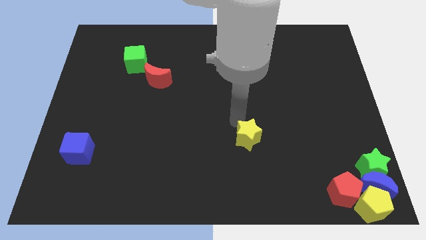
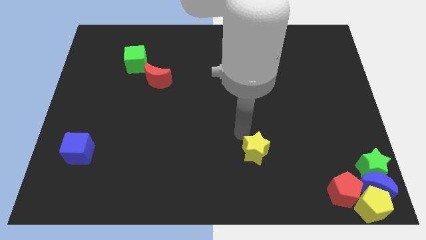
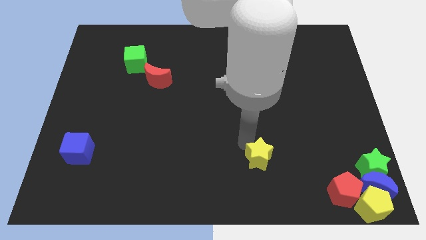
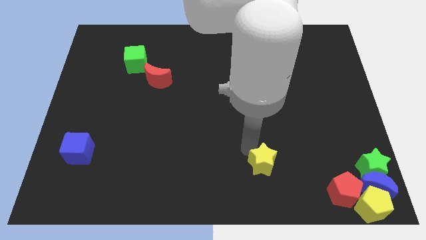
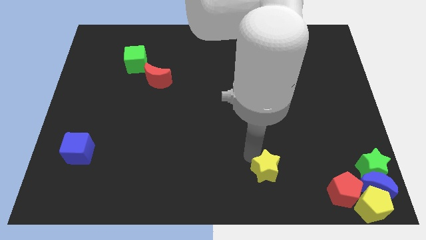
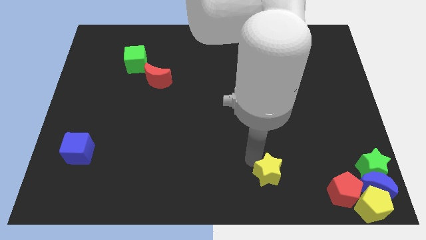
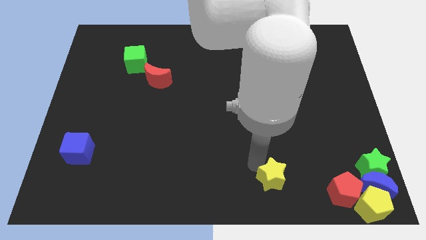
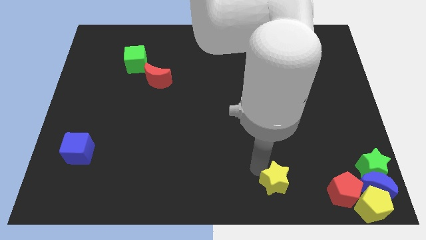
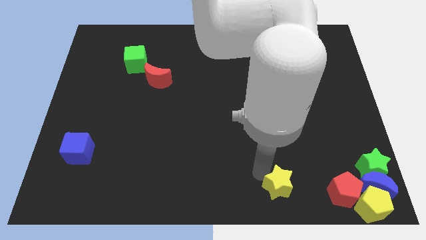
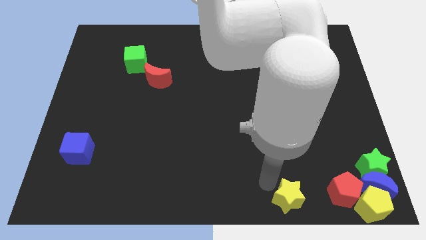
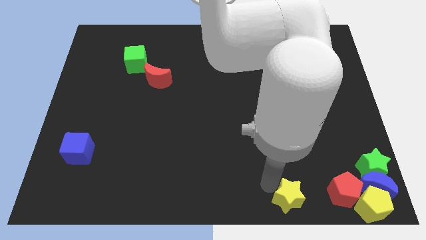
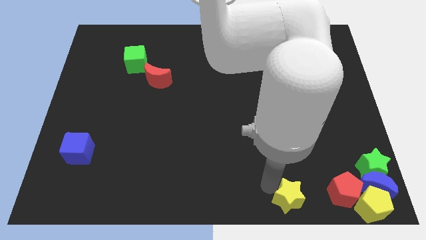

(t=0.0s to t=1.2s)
place the yellow star to the left side of red pentagon

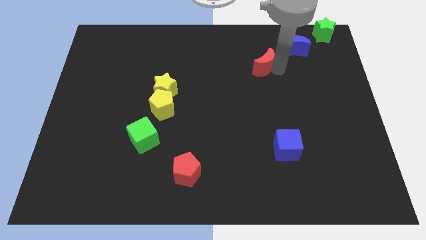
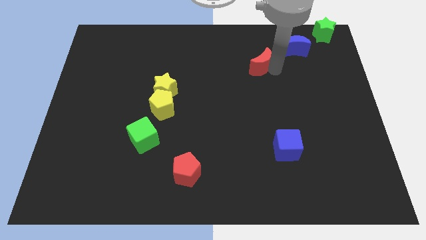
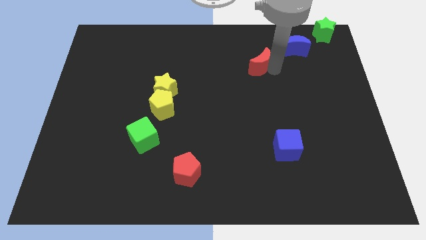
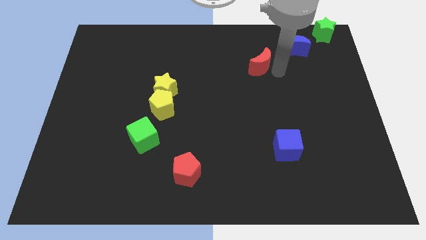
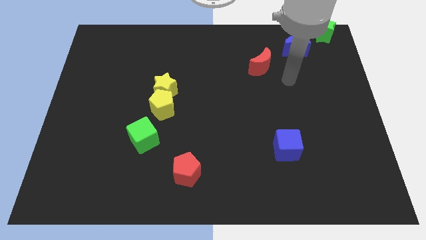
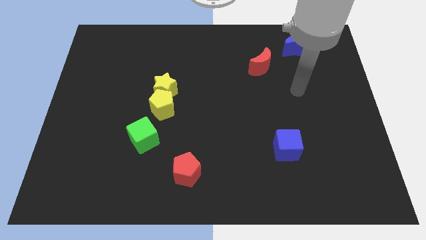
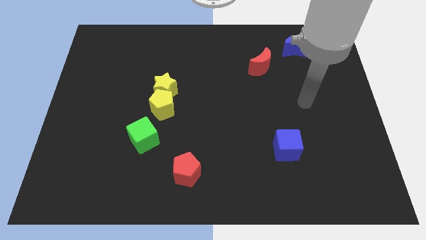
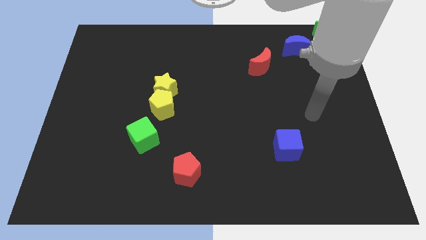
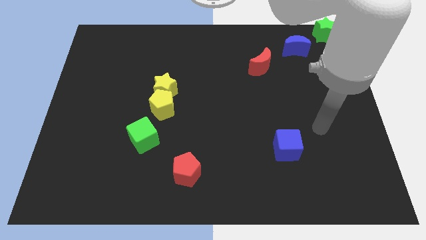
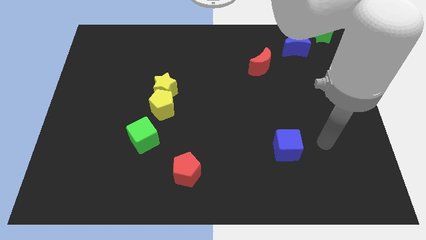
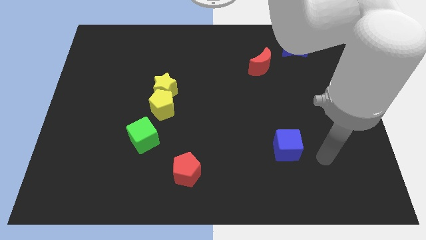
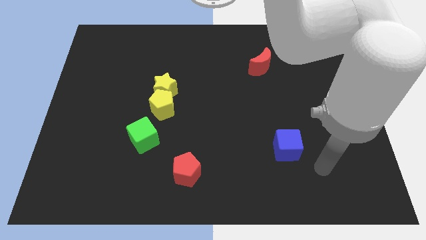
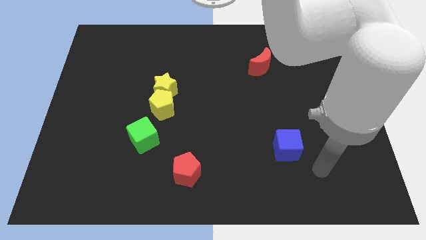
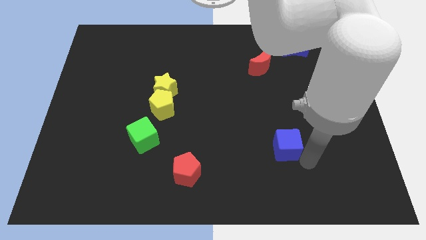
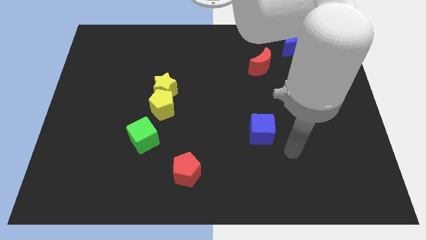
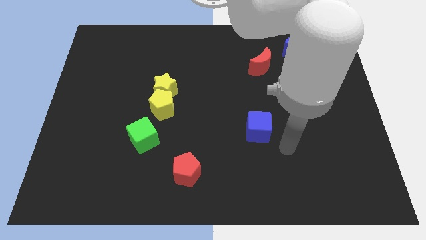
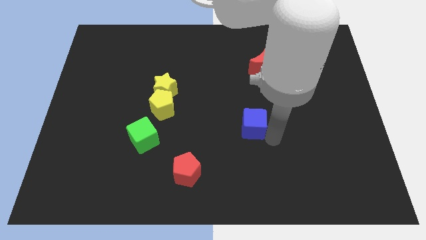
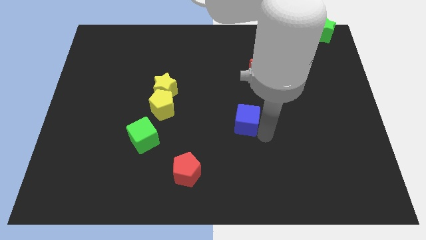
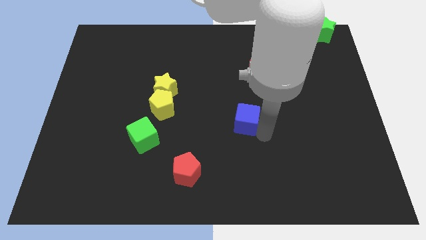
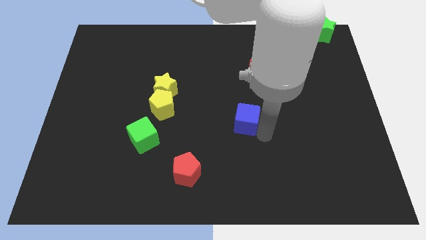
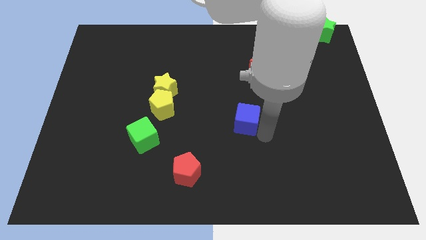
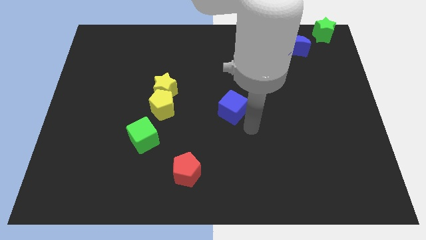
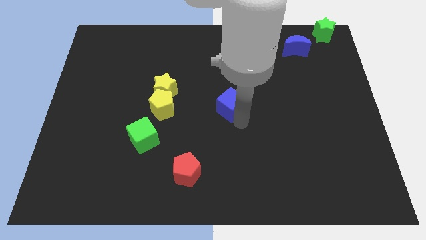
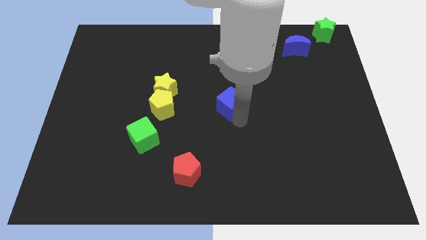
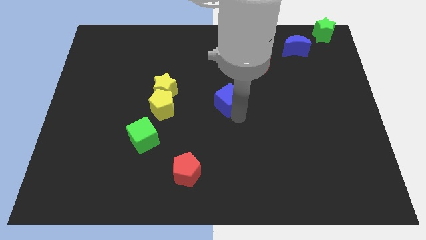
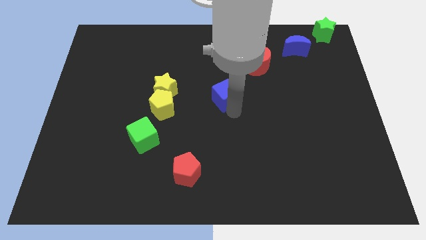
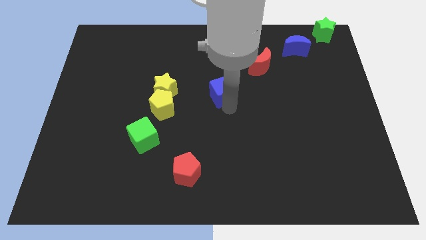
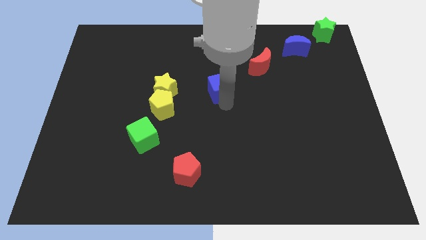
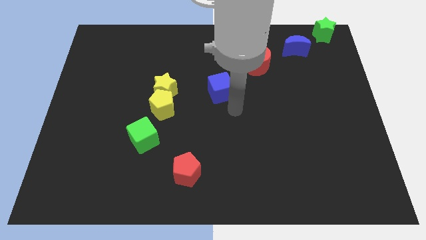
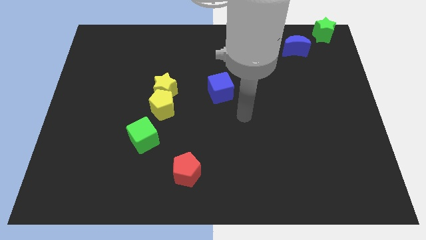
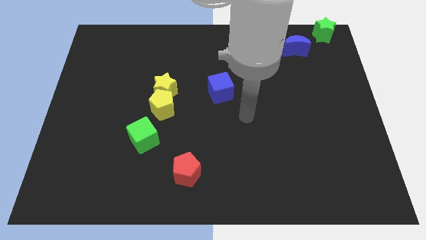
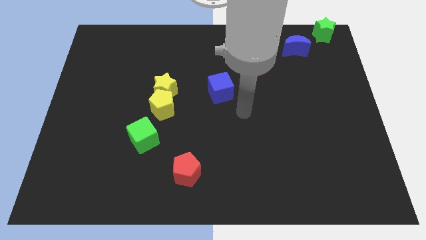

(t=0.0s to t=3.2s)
move the blue cube to the center

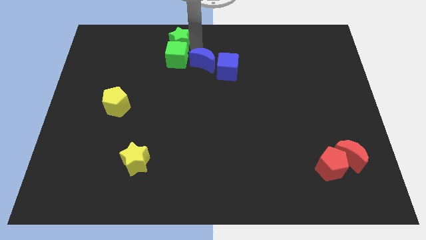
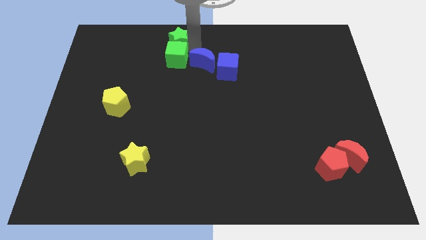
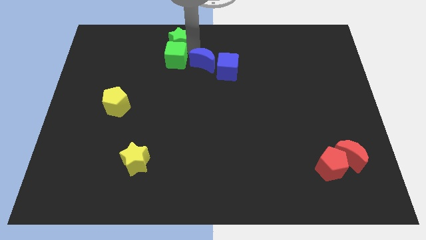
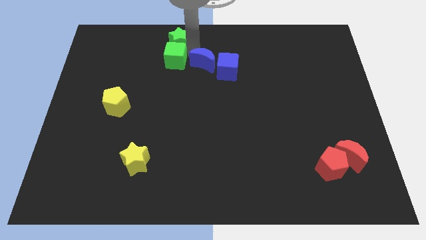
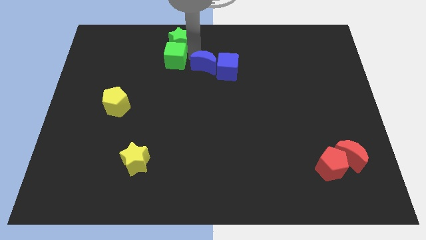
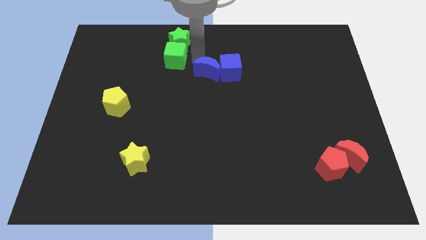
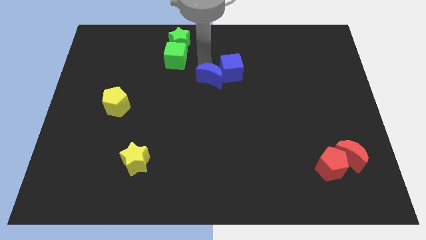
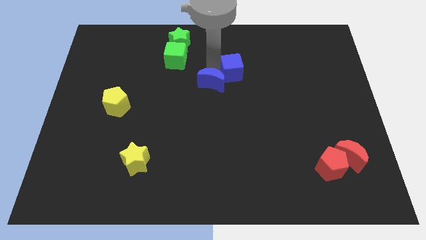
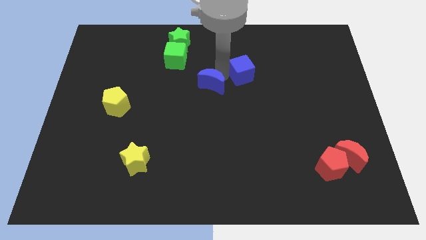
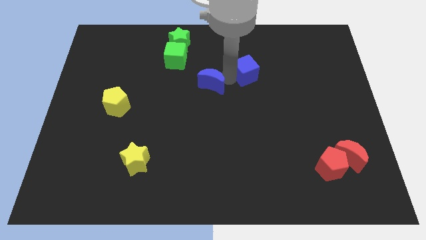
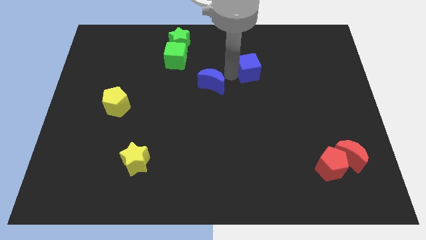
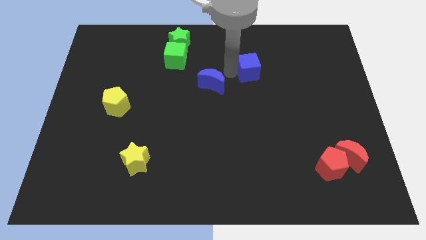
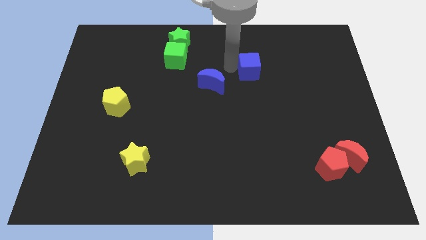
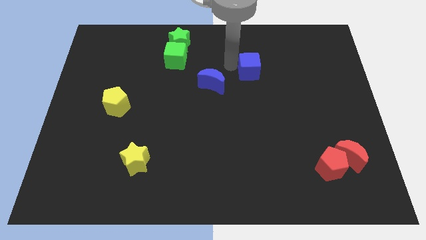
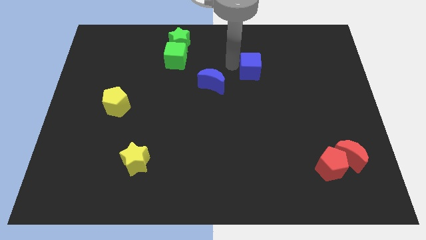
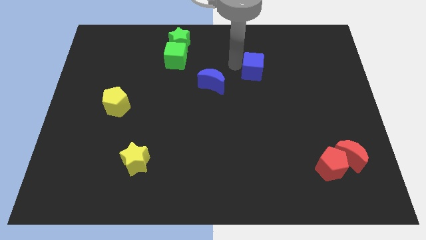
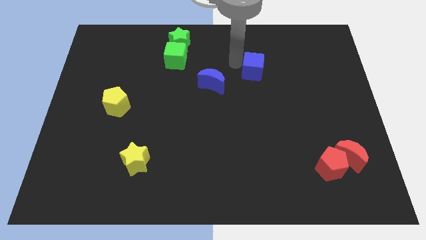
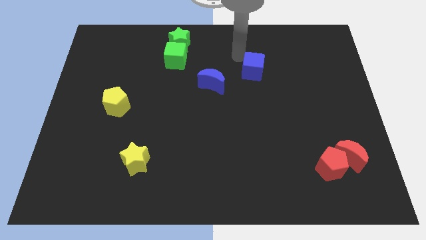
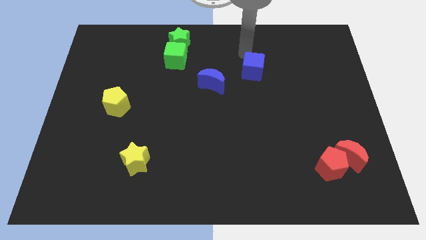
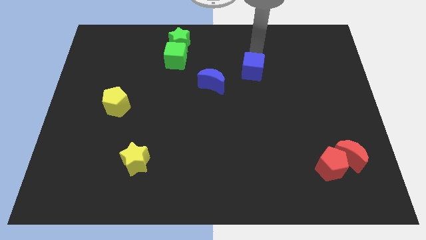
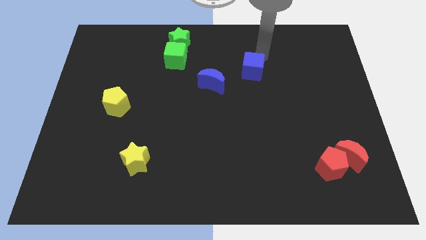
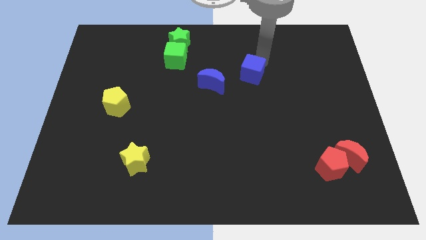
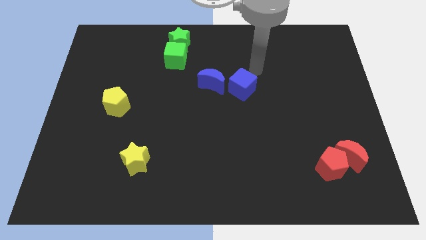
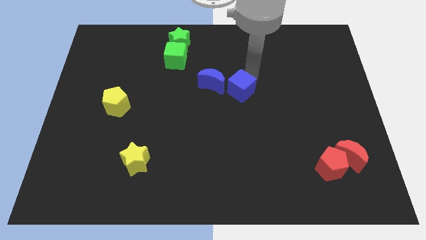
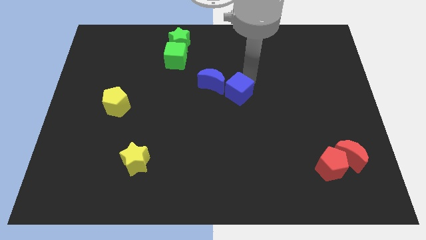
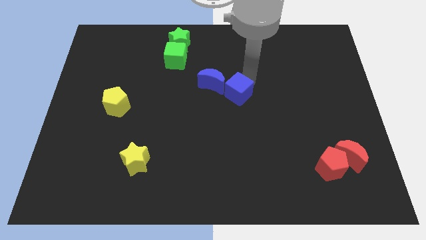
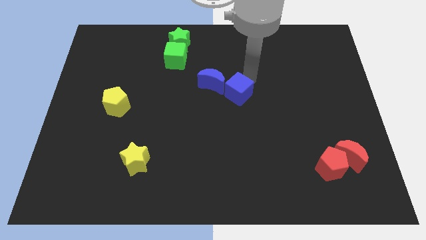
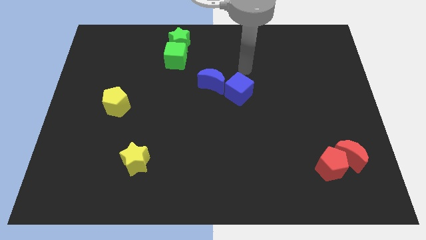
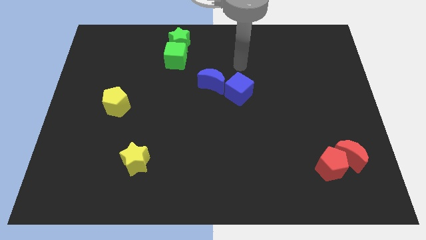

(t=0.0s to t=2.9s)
group the blue blocks diagonally to the group of red blocks

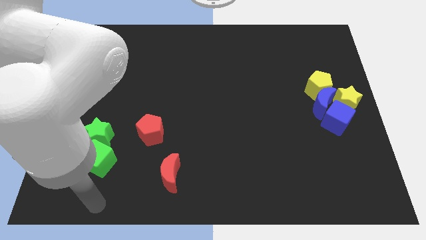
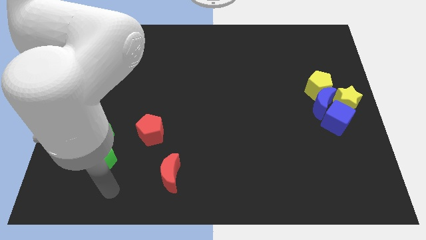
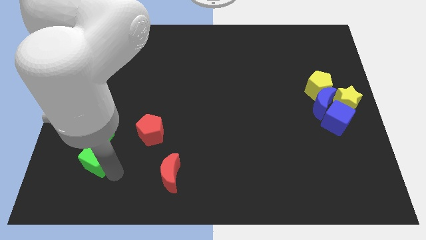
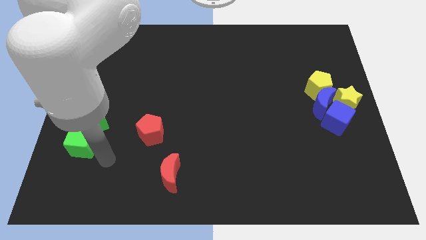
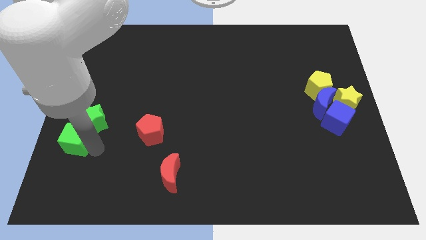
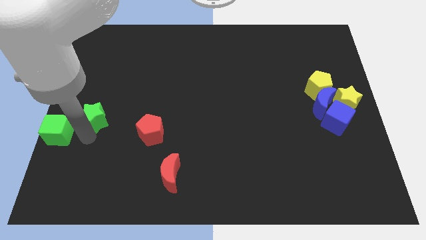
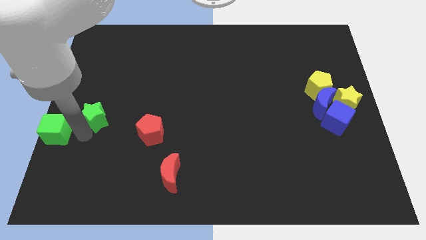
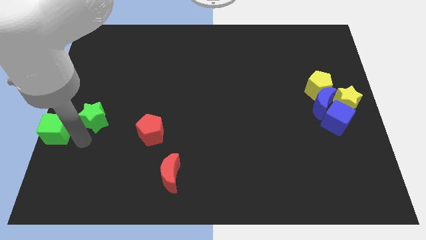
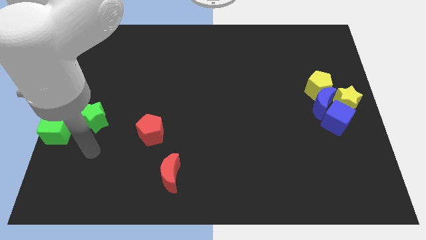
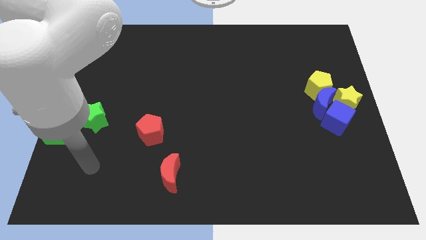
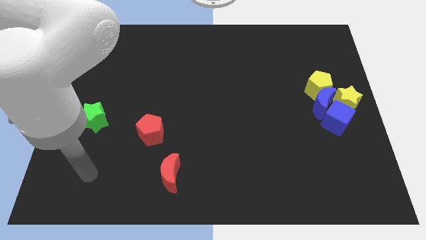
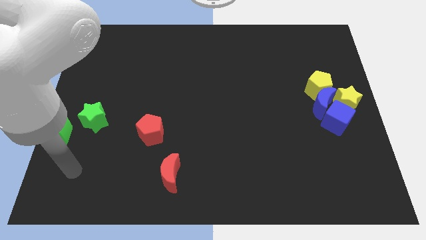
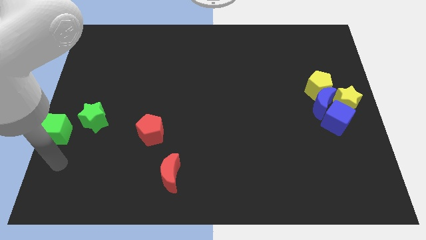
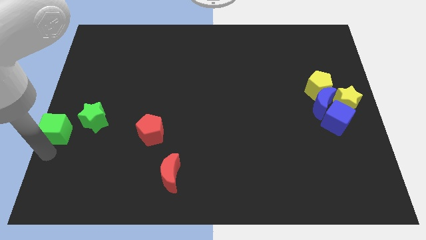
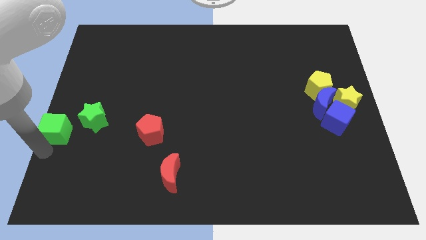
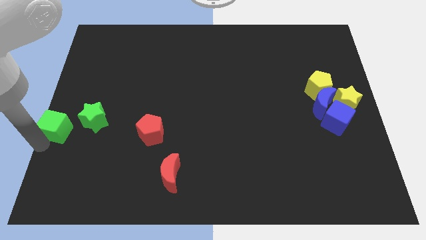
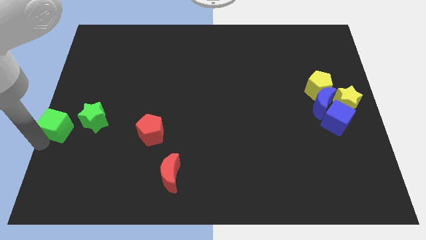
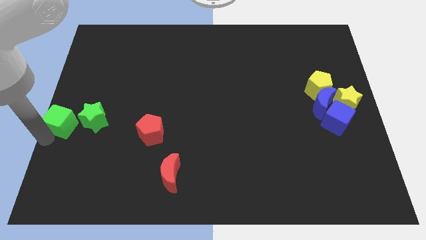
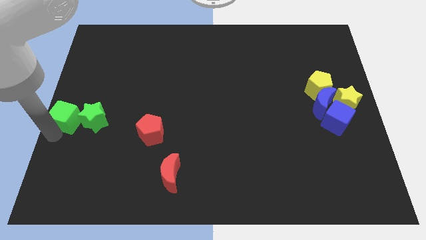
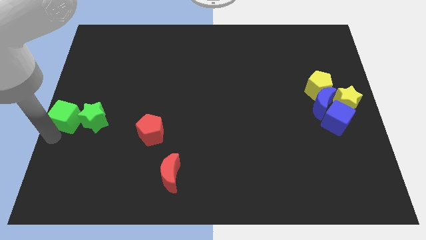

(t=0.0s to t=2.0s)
move the green cube to the left side of the green star
